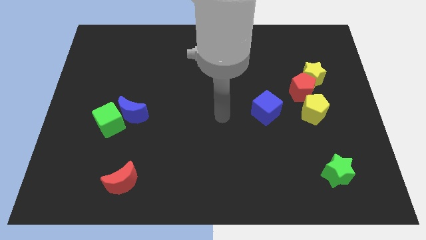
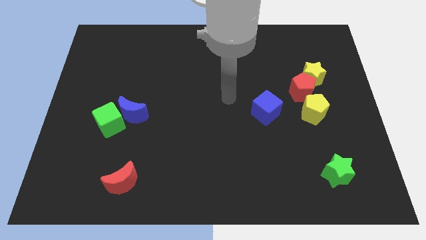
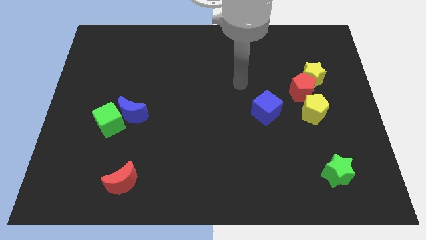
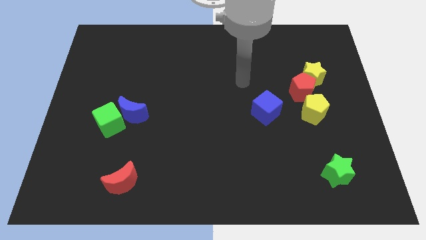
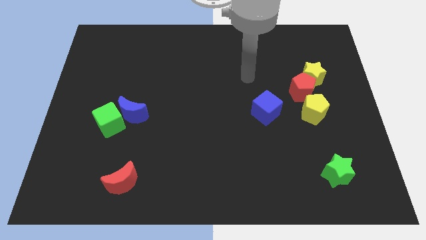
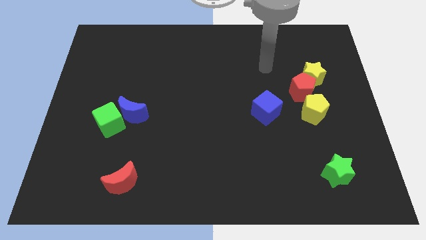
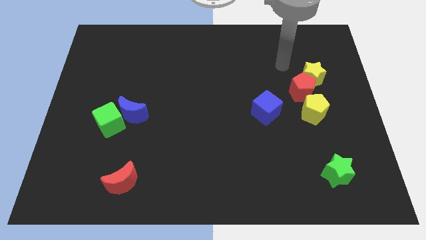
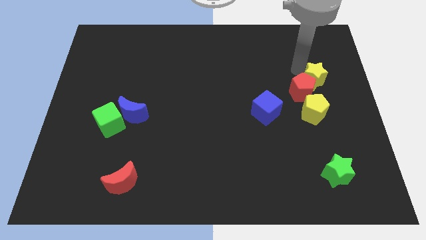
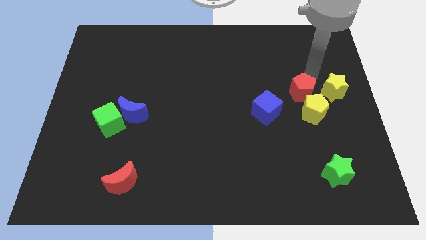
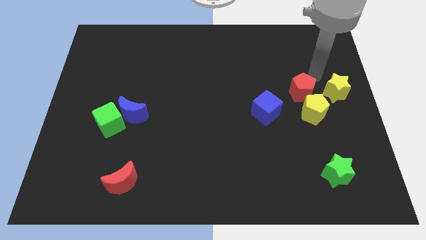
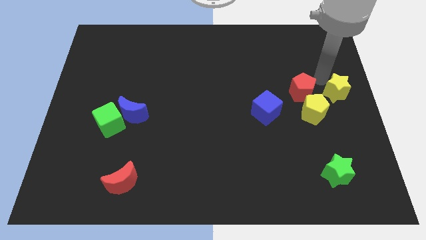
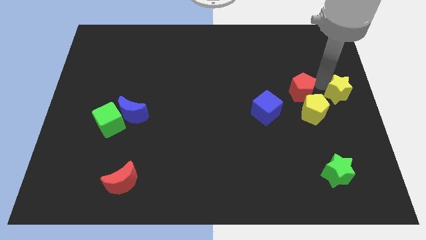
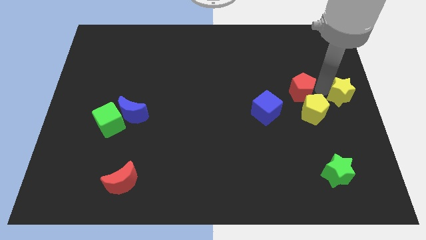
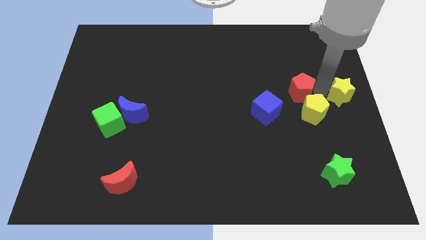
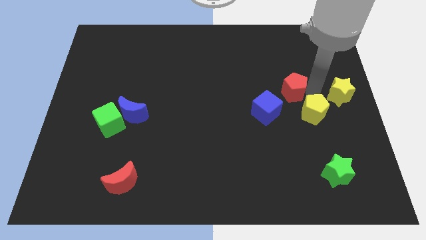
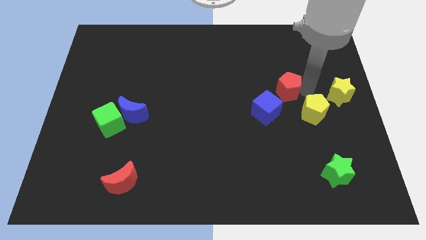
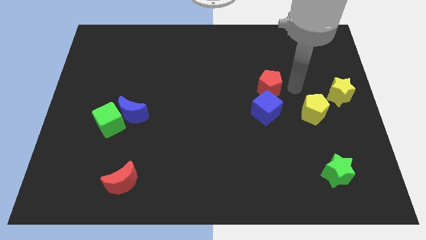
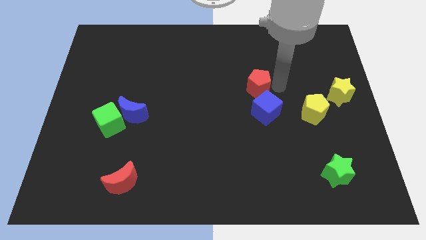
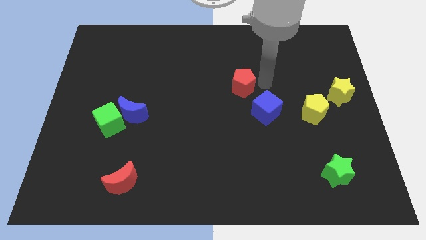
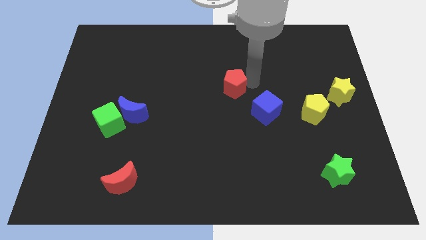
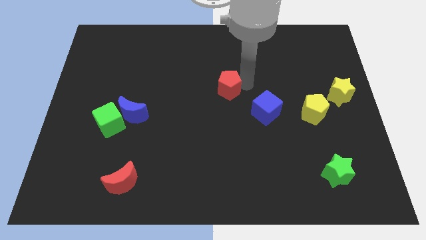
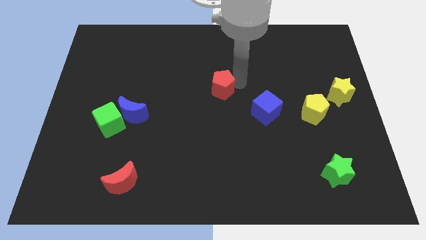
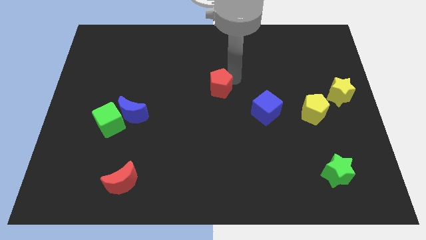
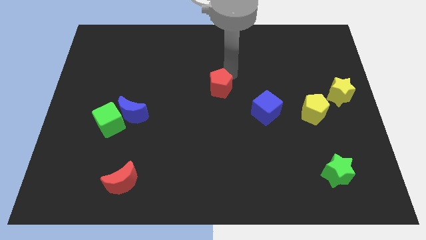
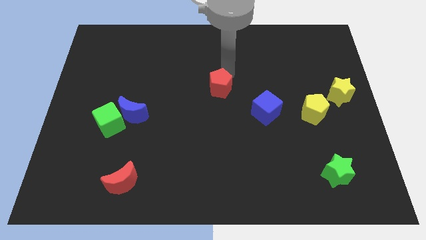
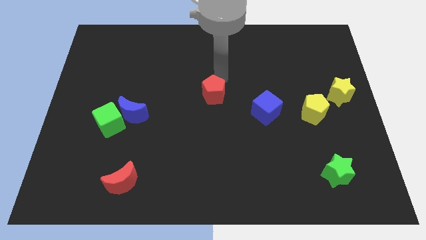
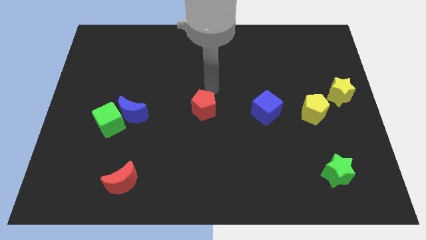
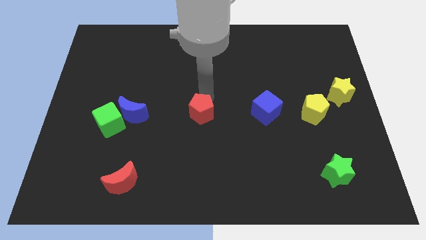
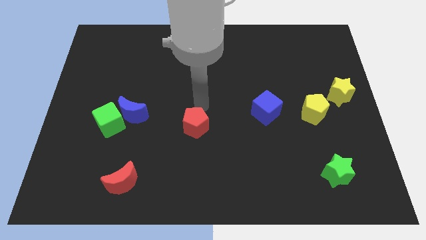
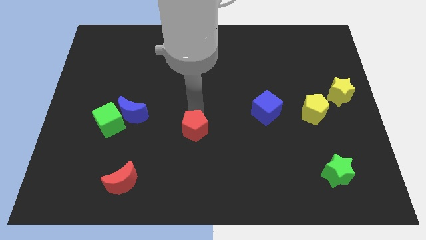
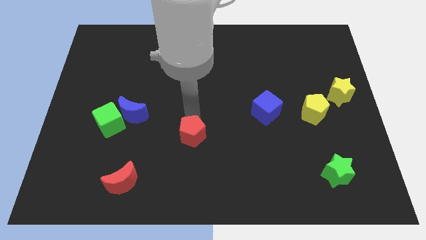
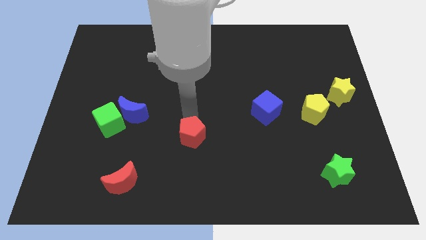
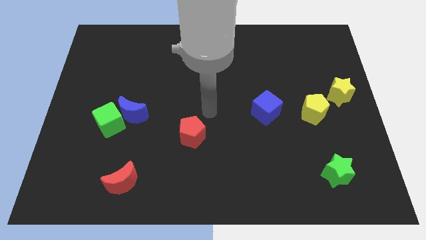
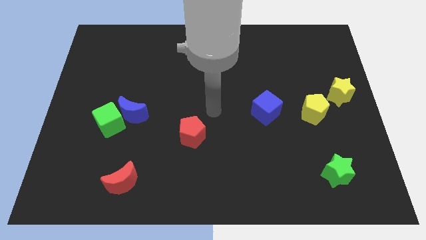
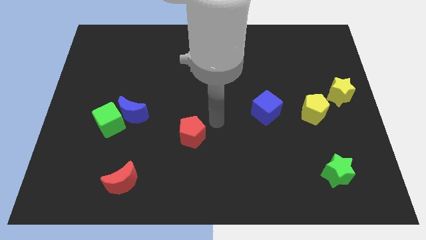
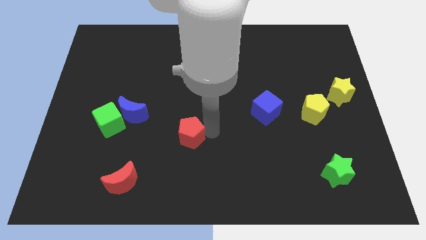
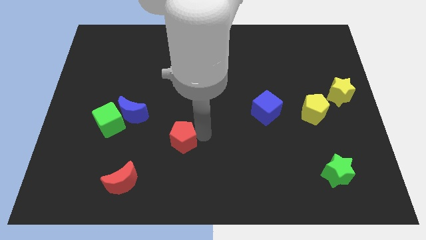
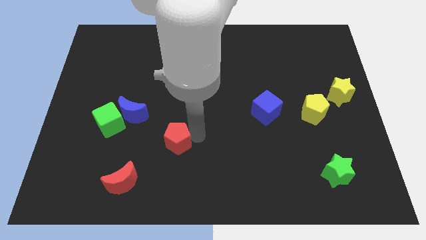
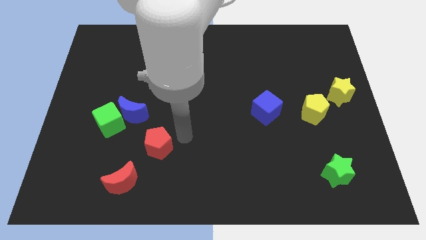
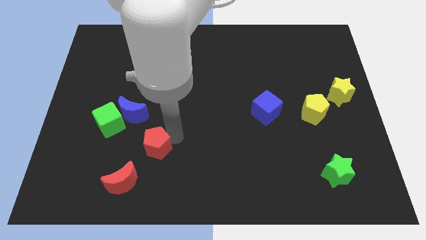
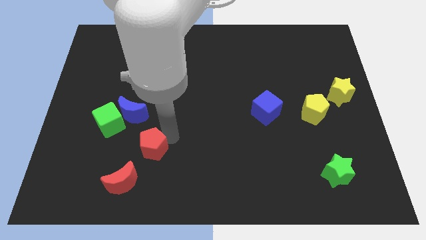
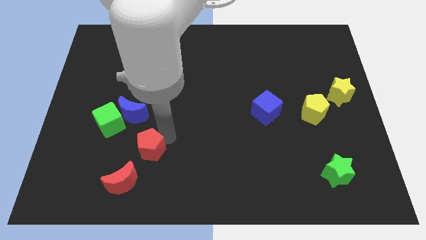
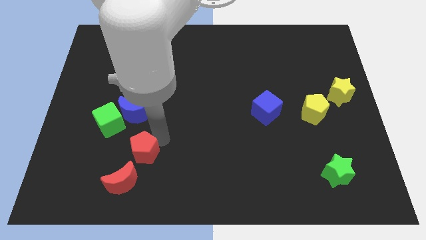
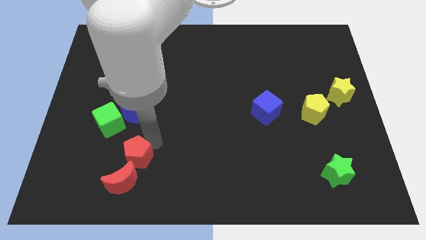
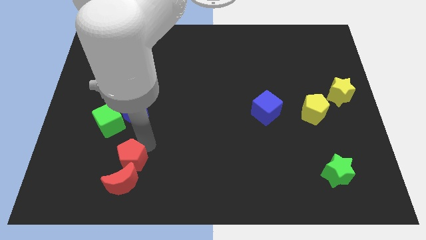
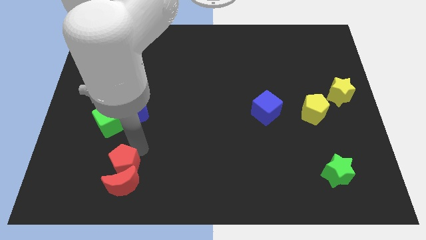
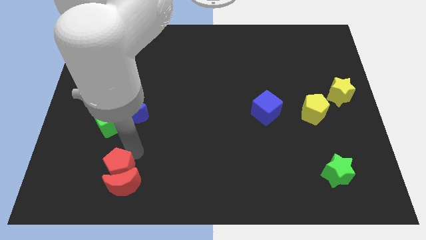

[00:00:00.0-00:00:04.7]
push the red pentagon towards the red moon

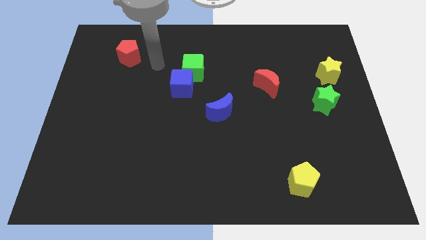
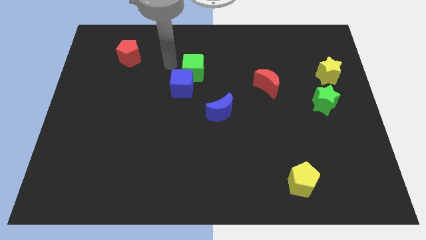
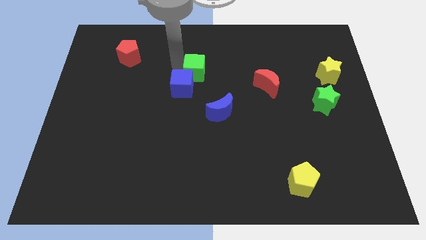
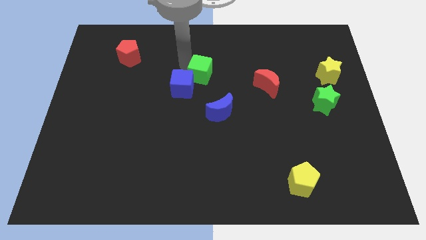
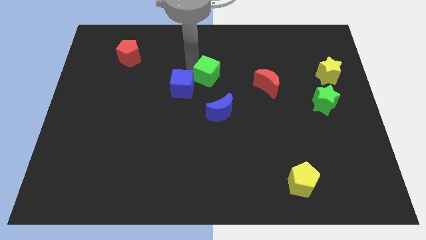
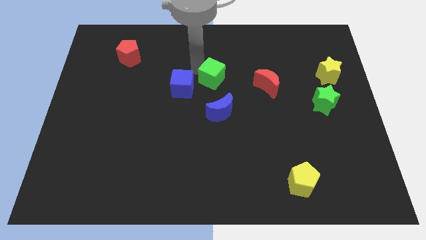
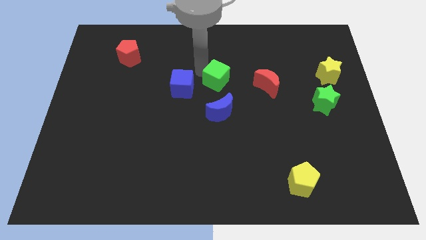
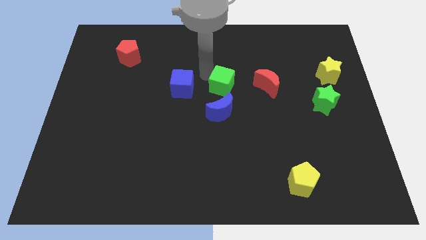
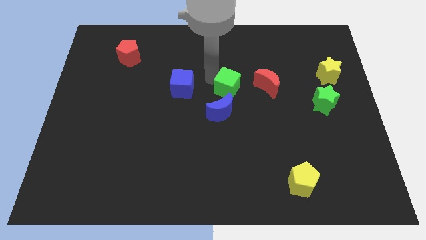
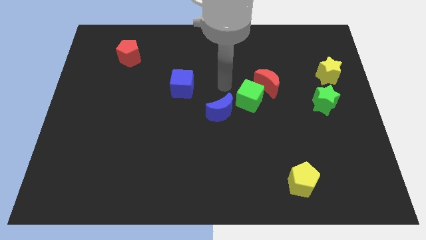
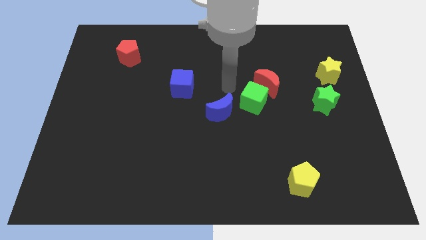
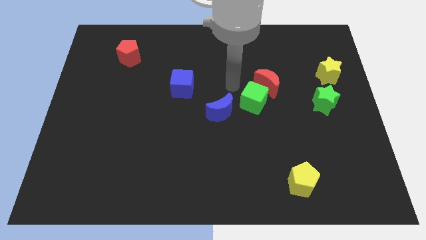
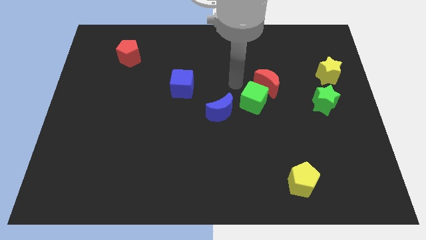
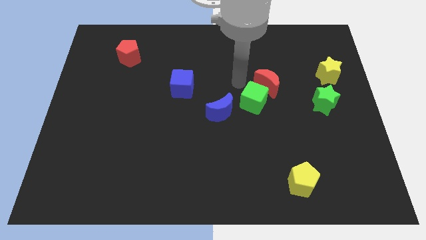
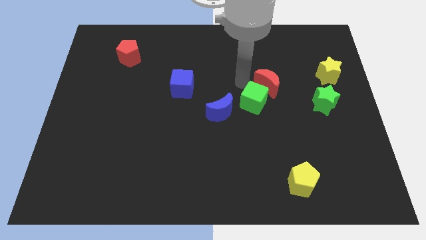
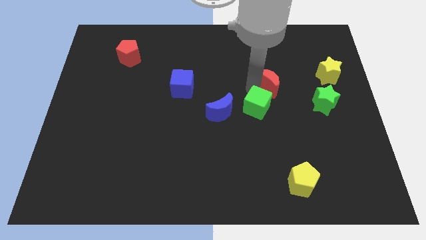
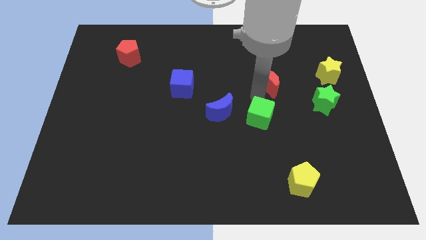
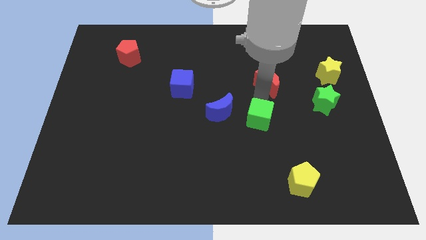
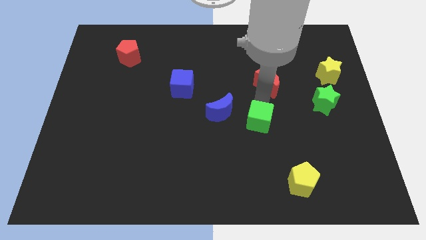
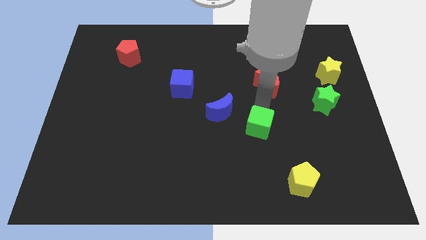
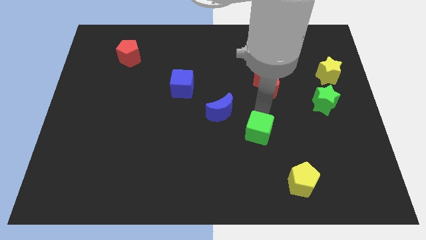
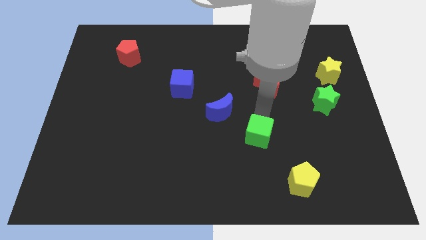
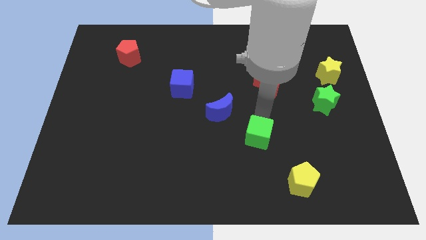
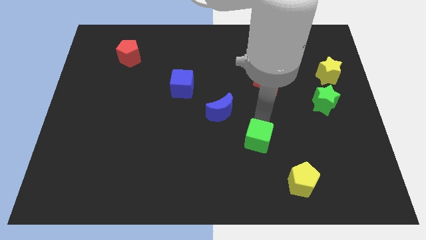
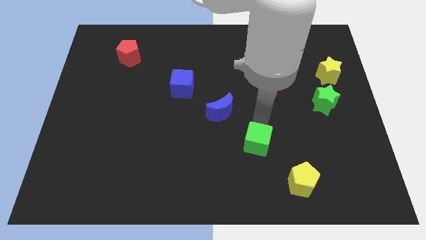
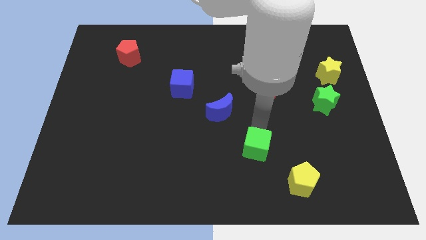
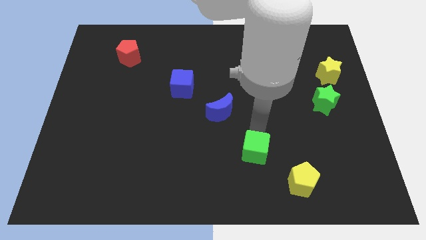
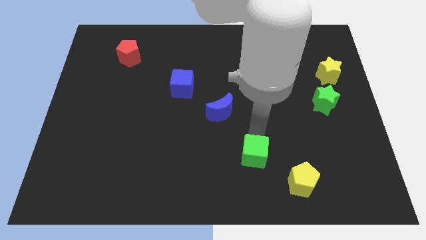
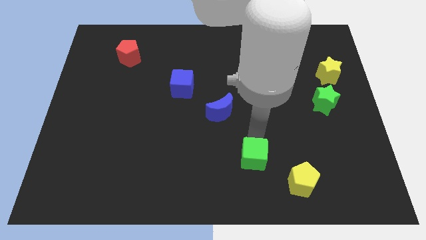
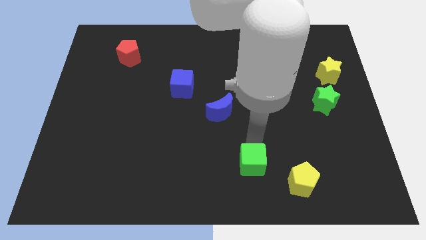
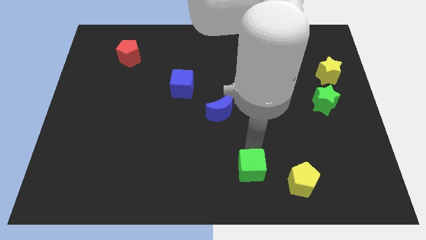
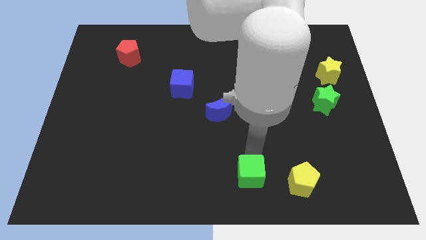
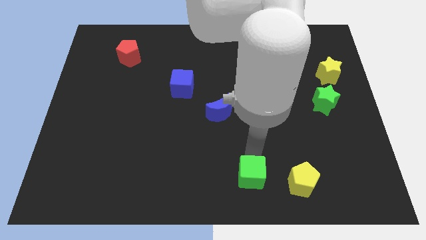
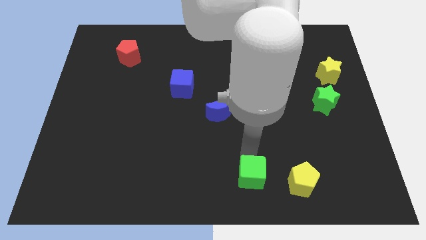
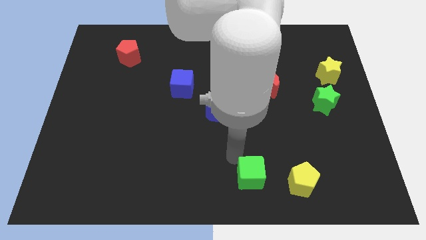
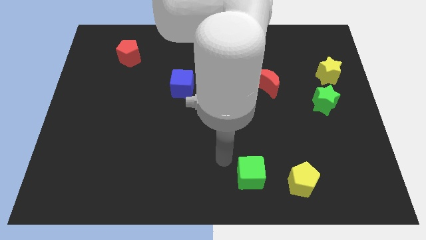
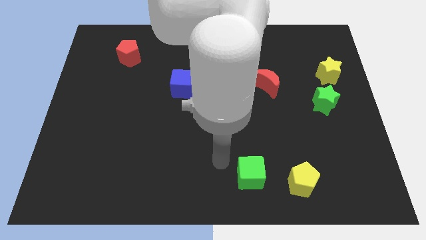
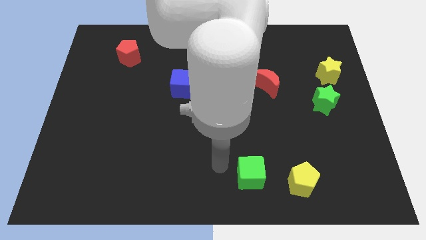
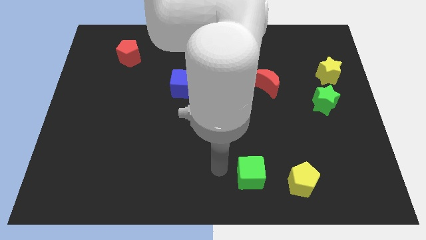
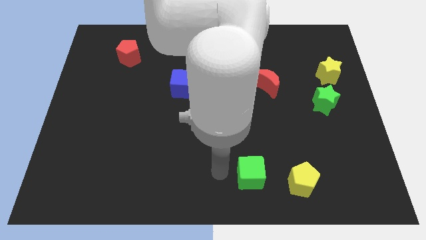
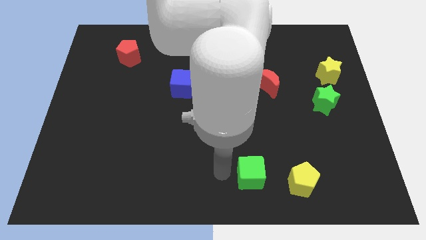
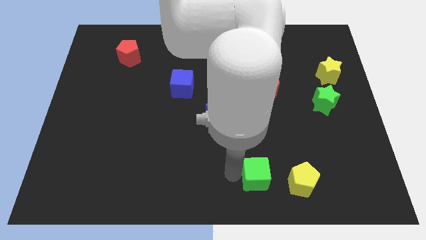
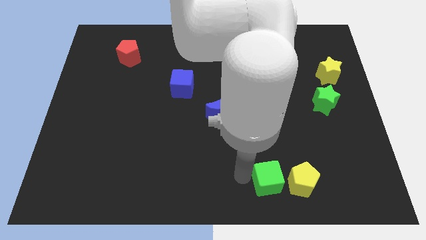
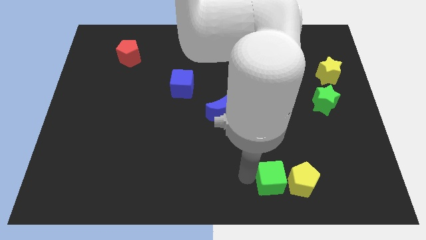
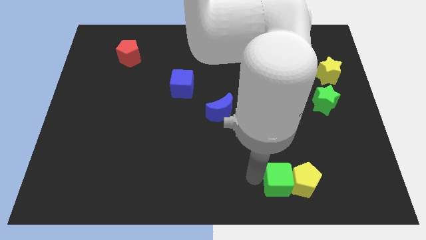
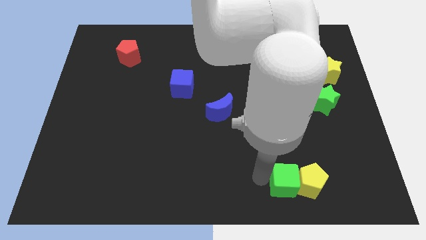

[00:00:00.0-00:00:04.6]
push the green cube to the yellow pentagon
